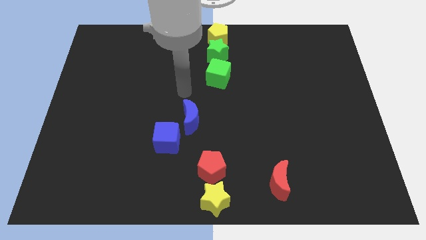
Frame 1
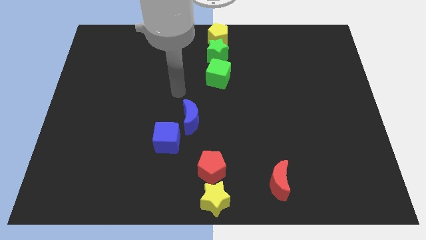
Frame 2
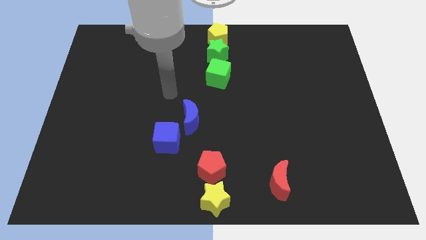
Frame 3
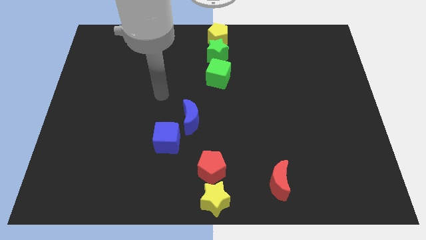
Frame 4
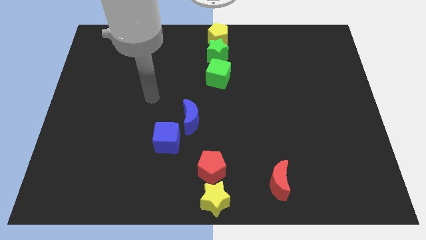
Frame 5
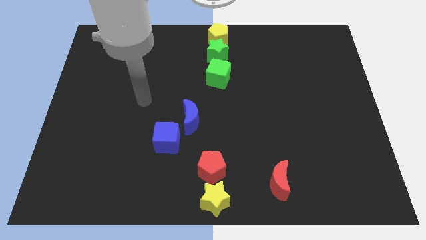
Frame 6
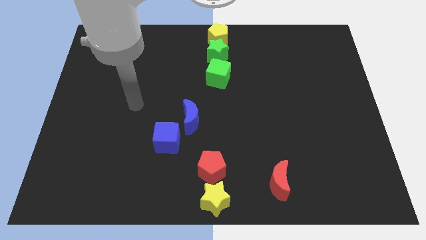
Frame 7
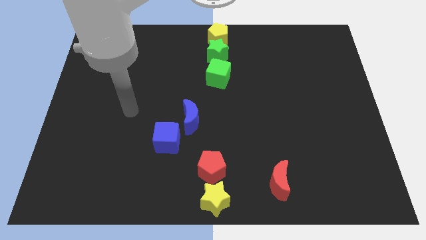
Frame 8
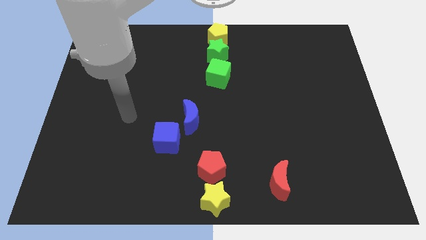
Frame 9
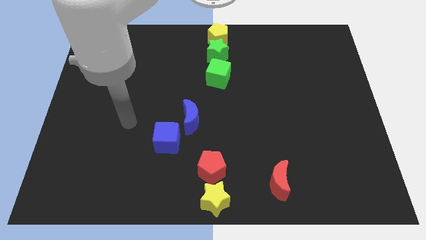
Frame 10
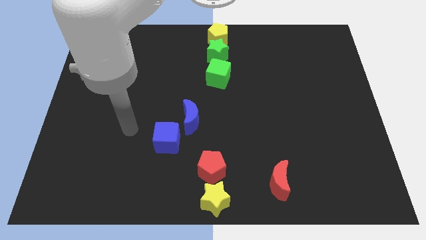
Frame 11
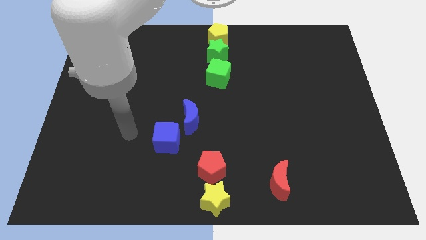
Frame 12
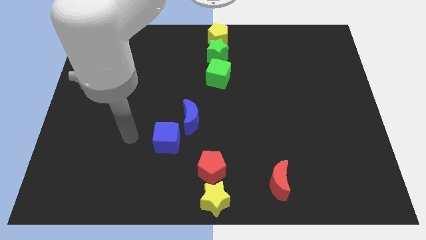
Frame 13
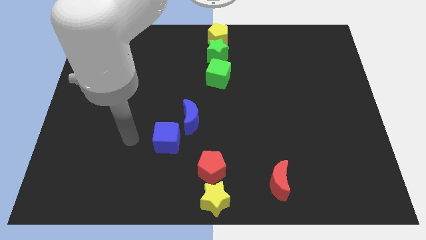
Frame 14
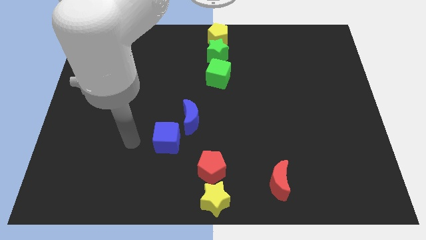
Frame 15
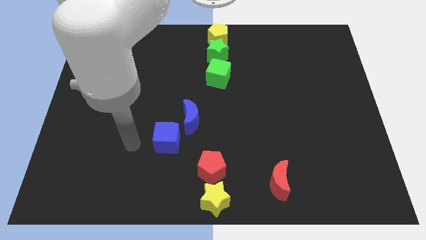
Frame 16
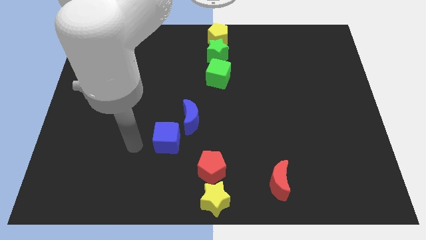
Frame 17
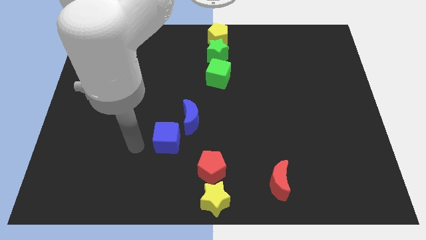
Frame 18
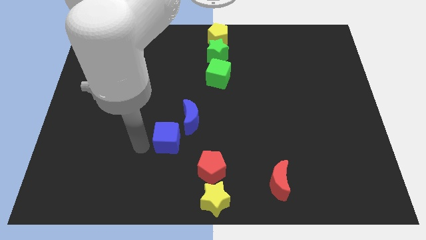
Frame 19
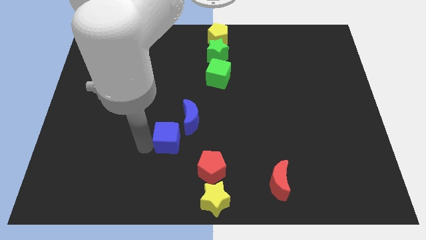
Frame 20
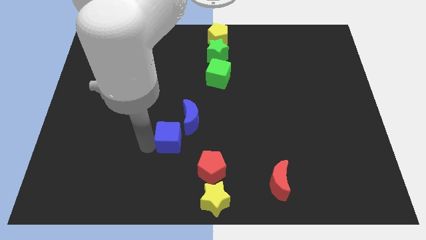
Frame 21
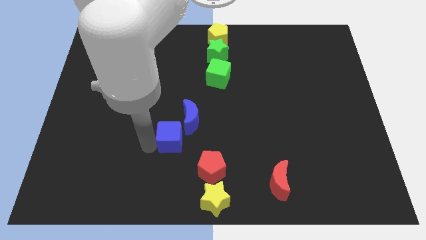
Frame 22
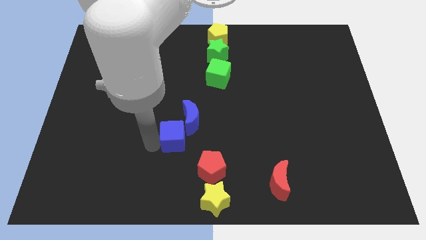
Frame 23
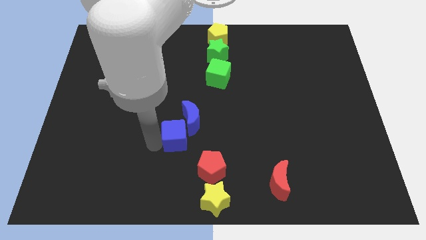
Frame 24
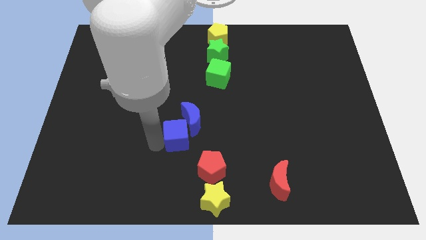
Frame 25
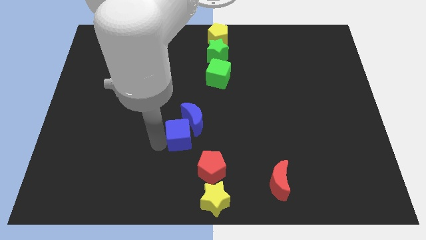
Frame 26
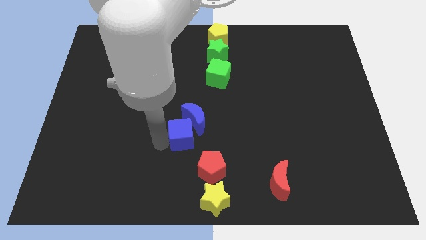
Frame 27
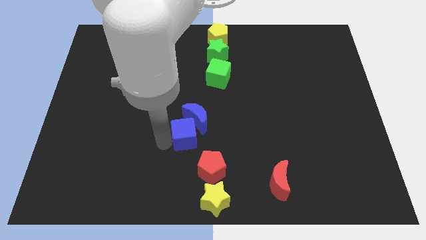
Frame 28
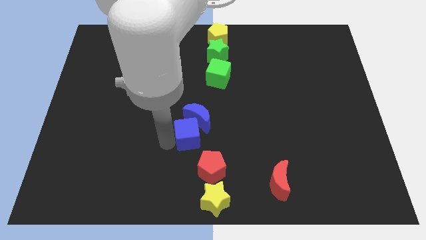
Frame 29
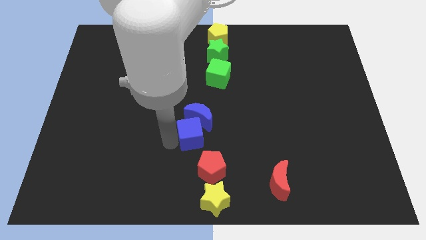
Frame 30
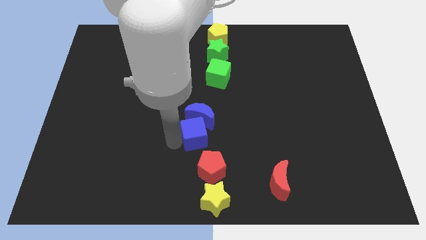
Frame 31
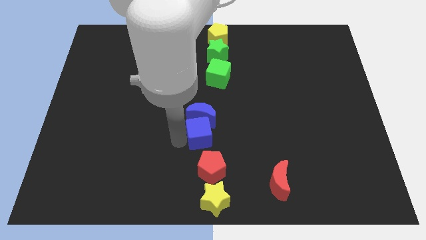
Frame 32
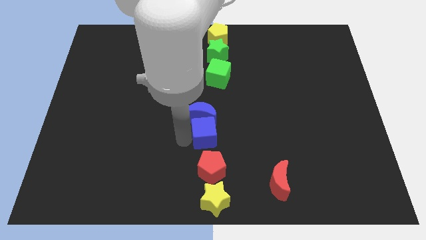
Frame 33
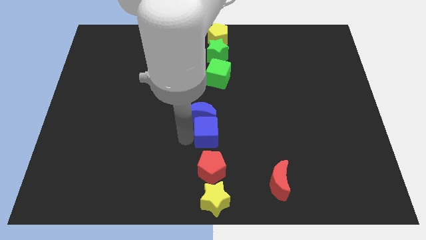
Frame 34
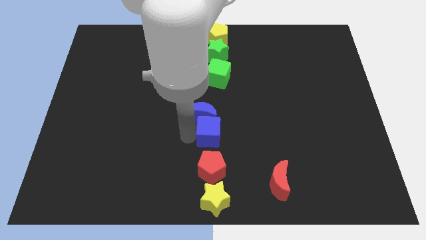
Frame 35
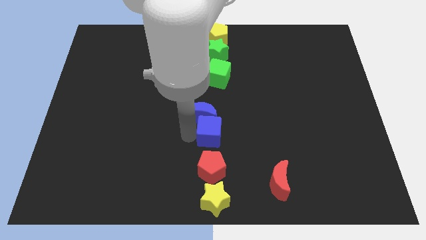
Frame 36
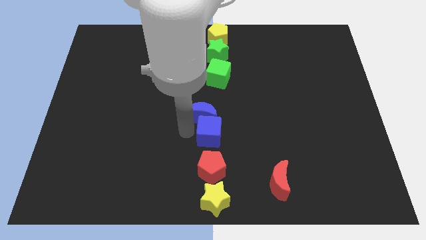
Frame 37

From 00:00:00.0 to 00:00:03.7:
place the blue cube above red pentagon

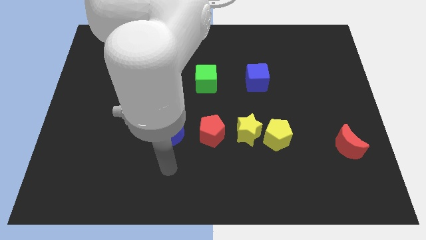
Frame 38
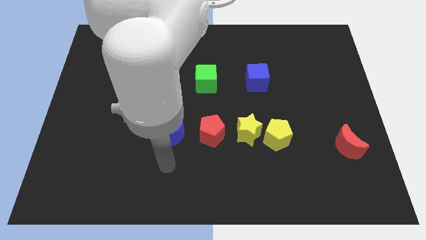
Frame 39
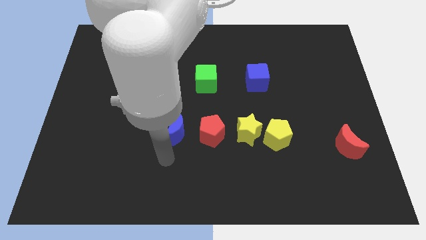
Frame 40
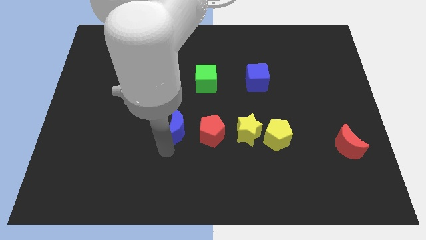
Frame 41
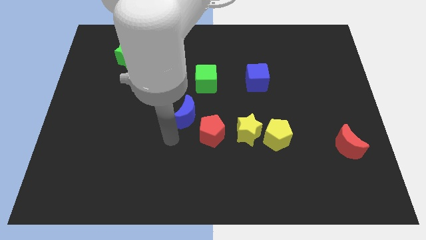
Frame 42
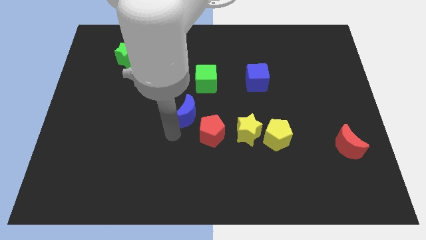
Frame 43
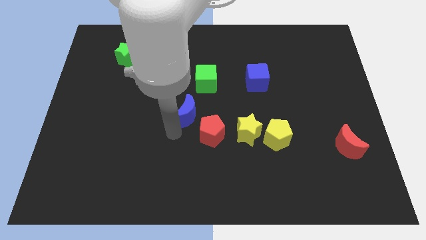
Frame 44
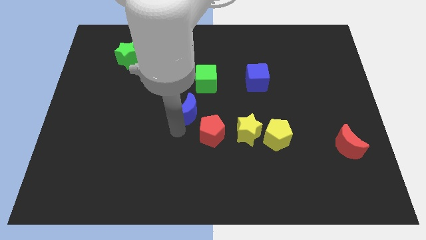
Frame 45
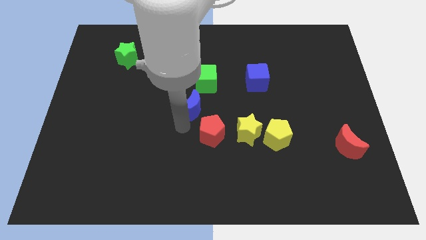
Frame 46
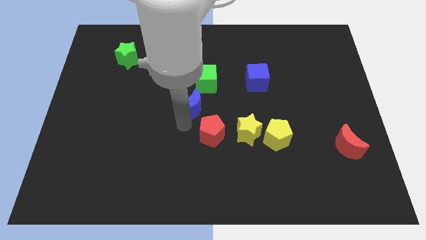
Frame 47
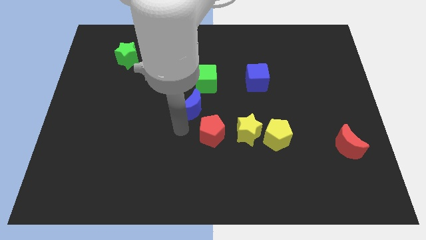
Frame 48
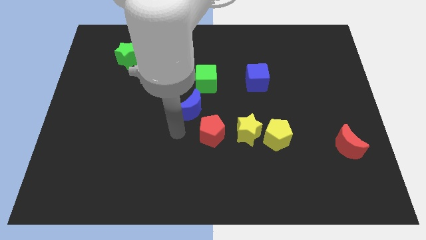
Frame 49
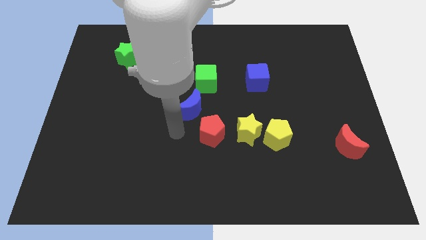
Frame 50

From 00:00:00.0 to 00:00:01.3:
slide the blue moon close to the green cube

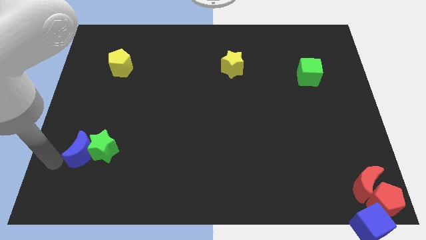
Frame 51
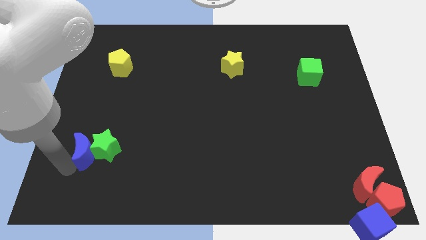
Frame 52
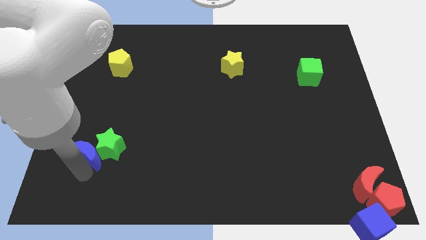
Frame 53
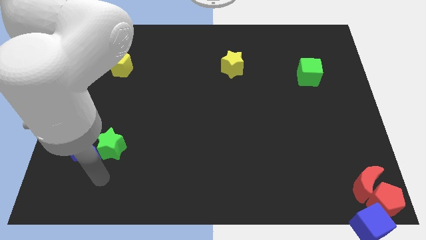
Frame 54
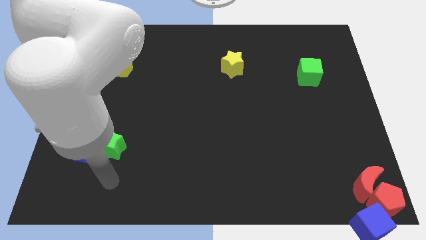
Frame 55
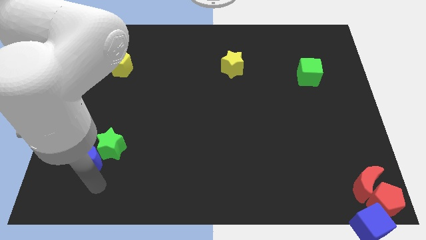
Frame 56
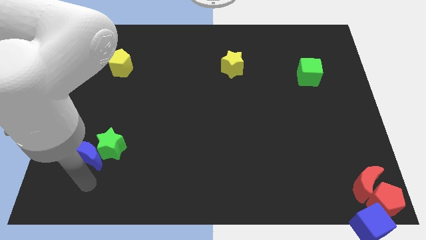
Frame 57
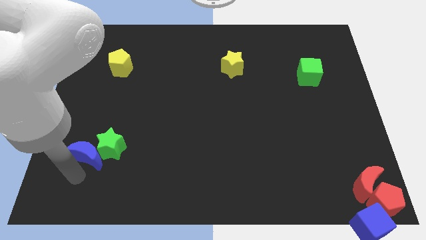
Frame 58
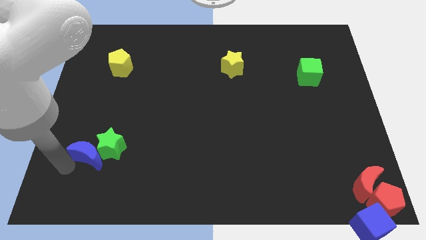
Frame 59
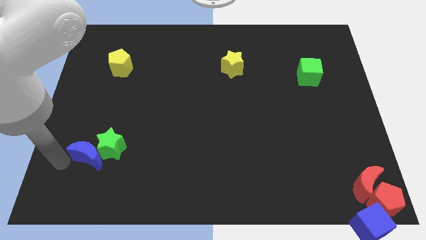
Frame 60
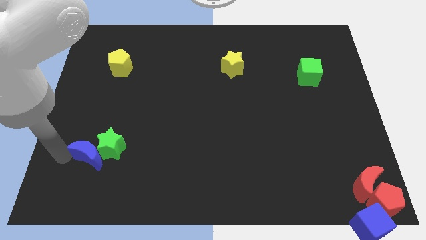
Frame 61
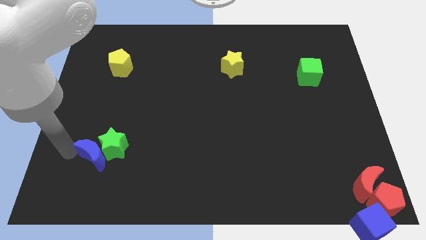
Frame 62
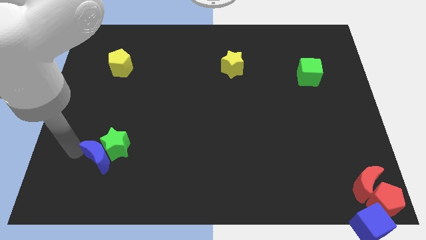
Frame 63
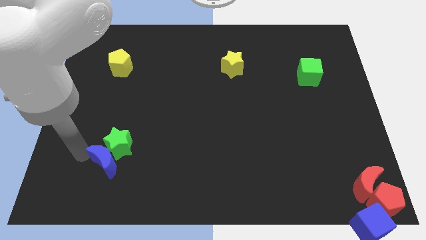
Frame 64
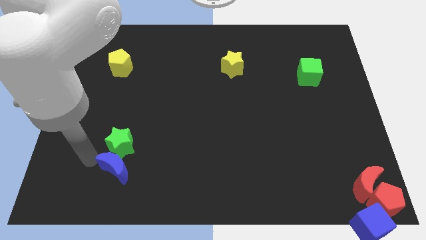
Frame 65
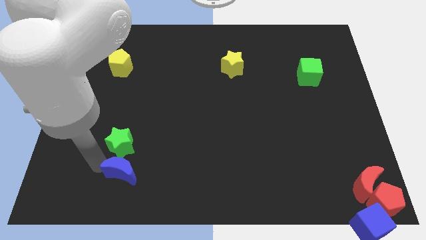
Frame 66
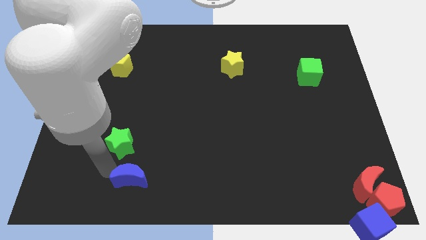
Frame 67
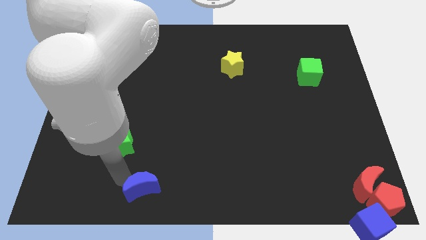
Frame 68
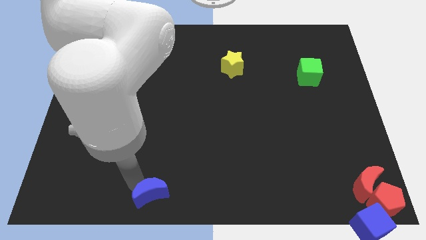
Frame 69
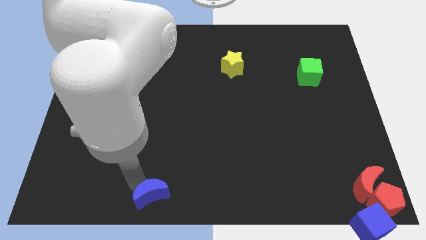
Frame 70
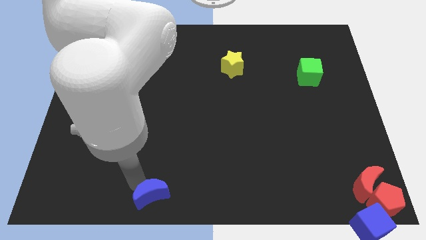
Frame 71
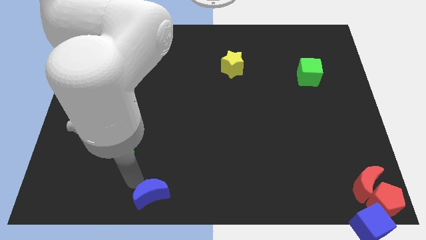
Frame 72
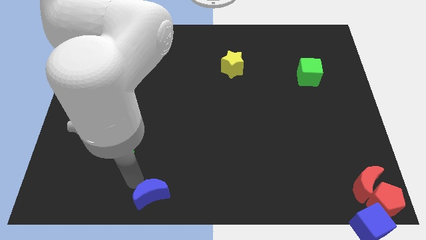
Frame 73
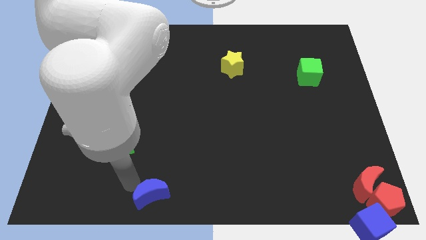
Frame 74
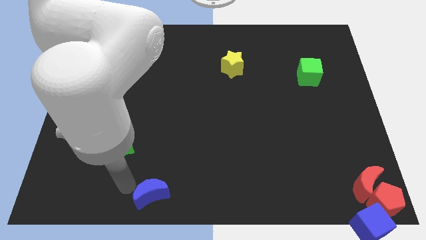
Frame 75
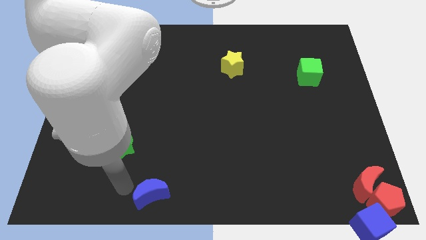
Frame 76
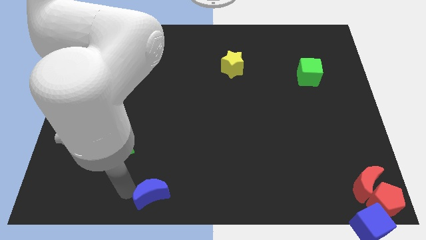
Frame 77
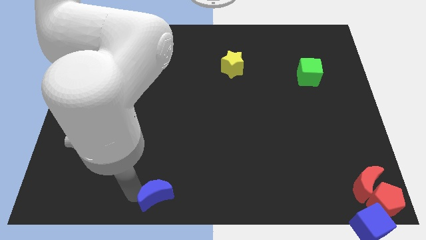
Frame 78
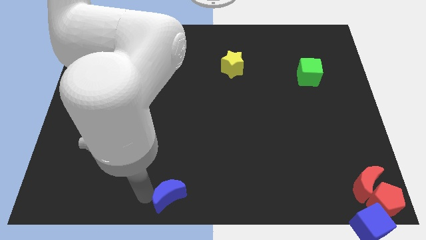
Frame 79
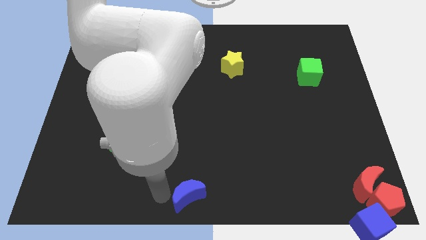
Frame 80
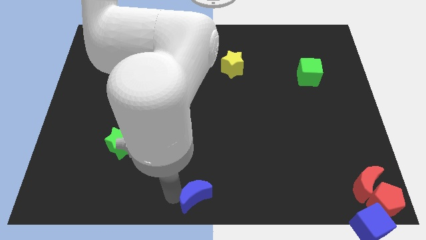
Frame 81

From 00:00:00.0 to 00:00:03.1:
move the blue cube to the bottom center of the board

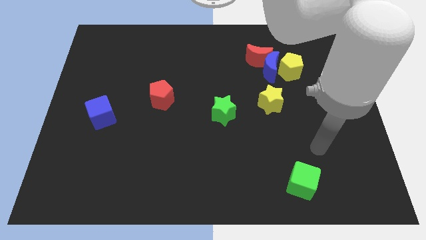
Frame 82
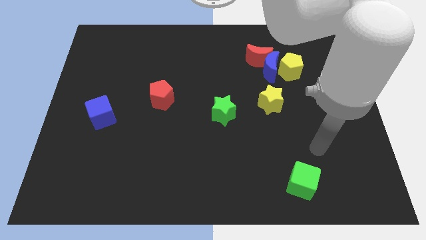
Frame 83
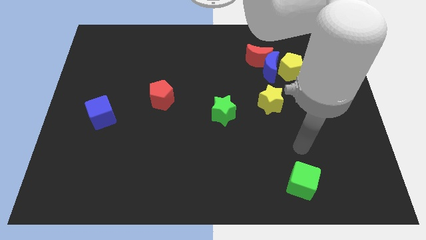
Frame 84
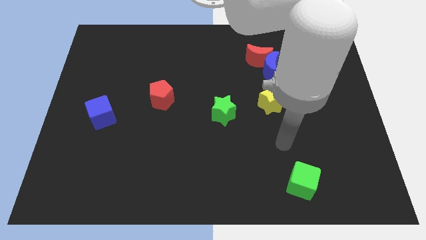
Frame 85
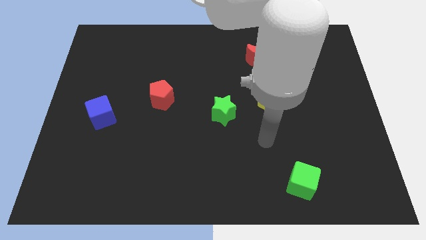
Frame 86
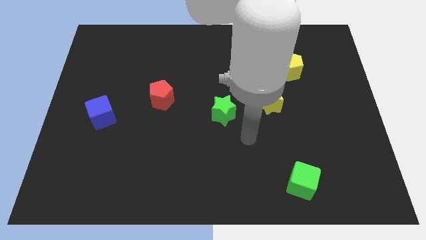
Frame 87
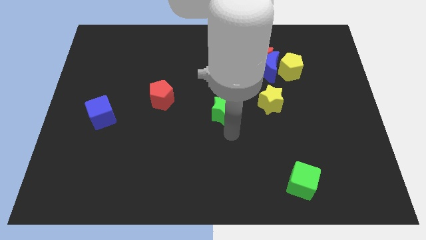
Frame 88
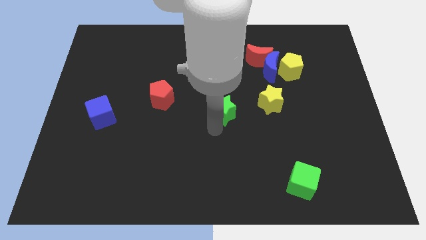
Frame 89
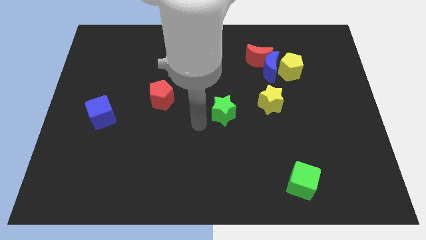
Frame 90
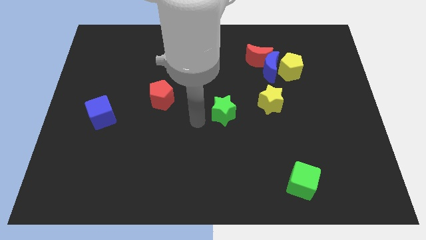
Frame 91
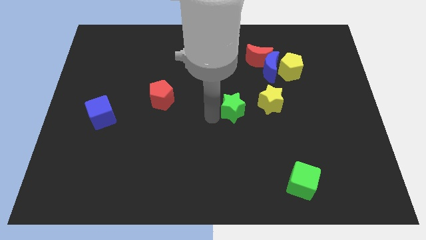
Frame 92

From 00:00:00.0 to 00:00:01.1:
move your arm towards the yellow star
